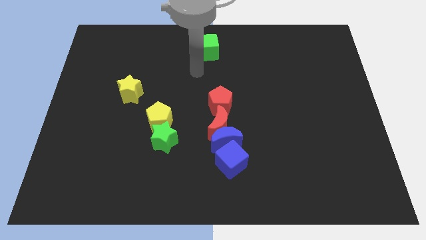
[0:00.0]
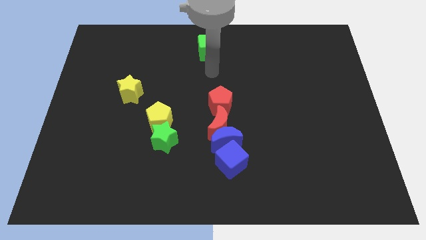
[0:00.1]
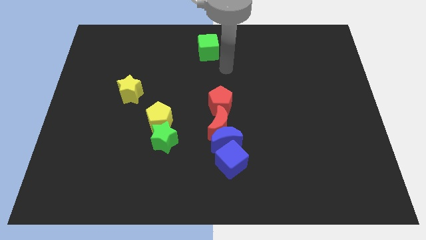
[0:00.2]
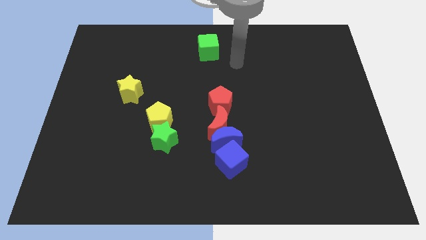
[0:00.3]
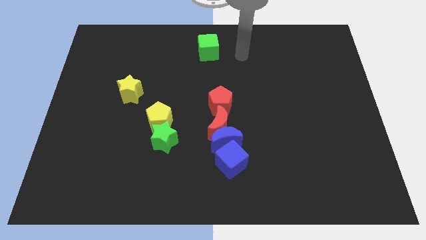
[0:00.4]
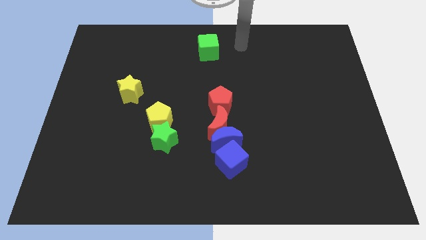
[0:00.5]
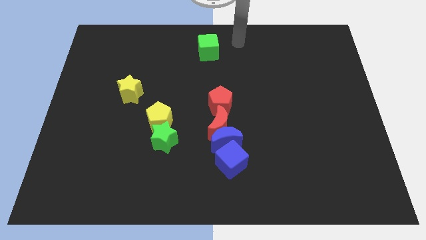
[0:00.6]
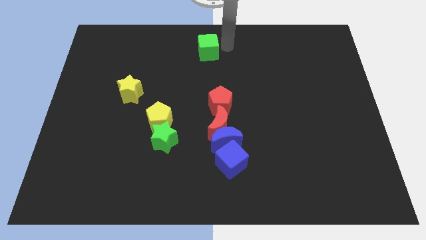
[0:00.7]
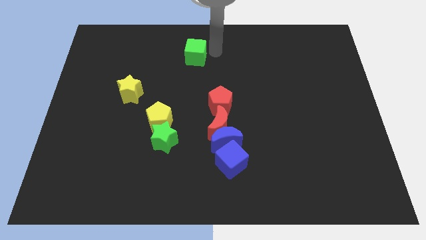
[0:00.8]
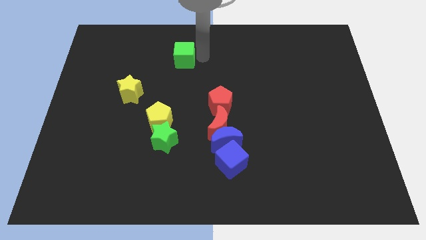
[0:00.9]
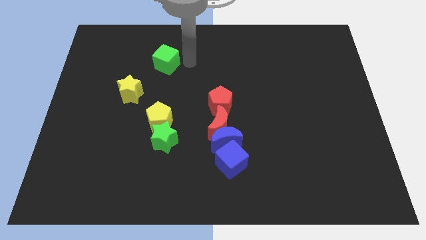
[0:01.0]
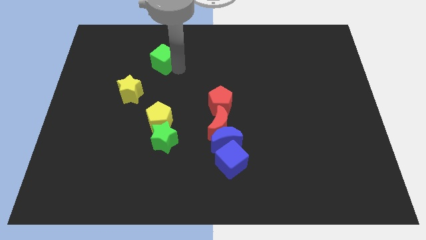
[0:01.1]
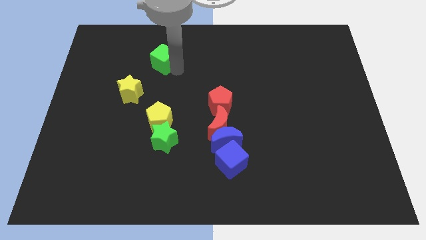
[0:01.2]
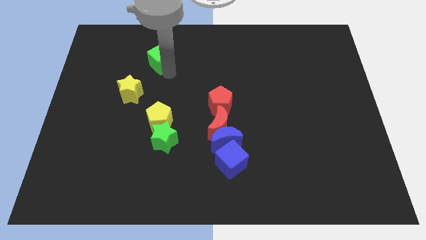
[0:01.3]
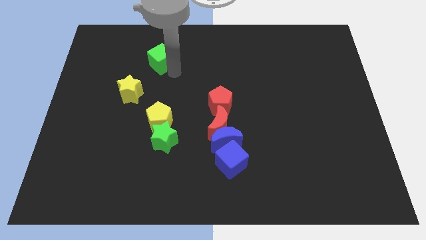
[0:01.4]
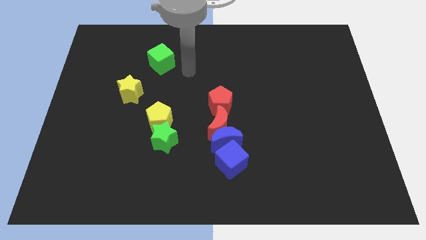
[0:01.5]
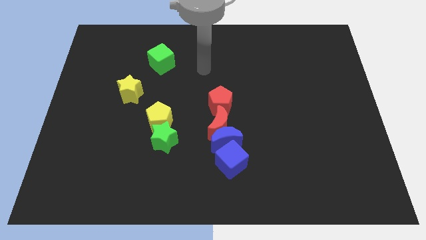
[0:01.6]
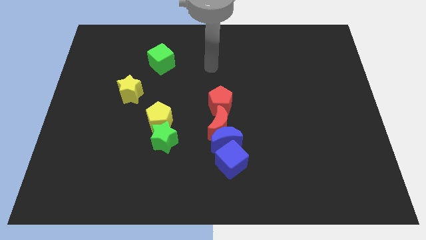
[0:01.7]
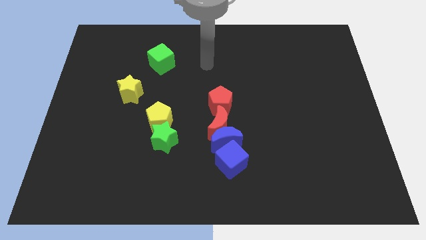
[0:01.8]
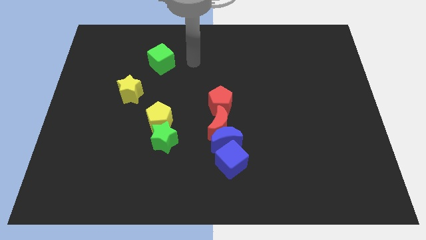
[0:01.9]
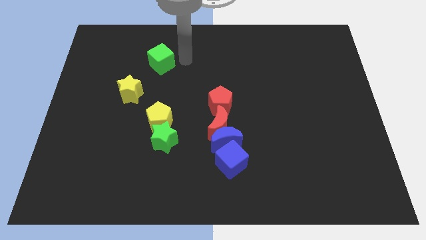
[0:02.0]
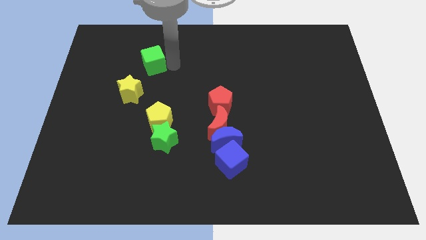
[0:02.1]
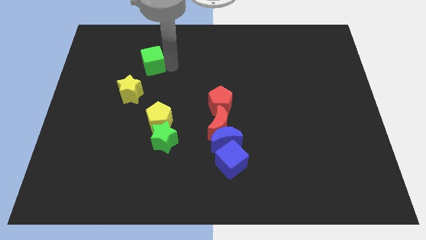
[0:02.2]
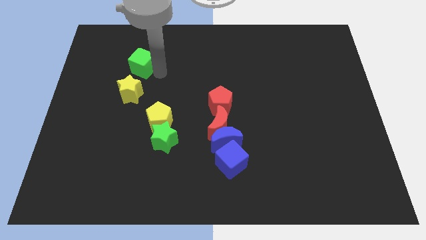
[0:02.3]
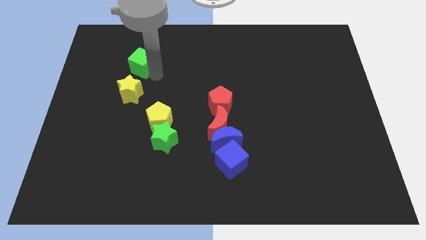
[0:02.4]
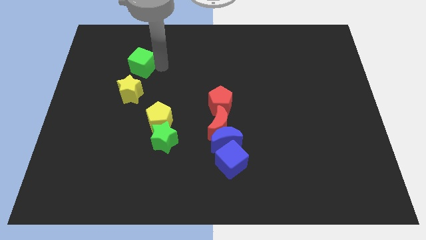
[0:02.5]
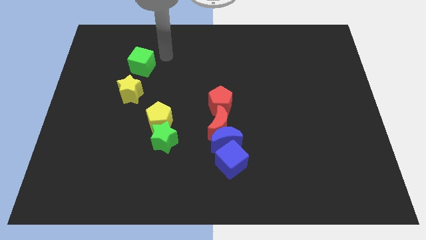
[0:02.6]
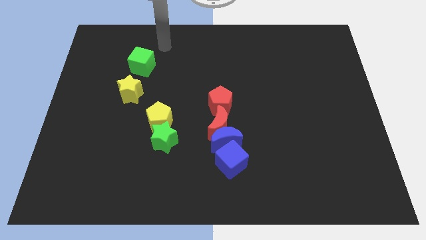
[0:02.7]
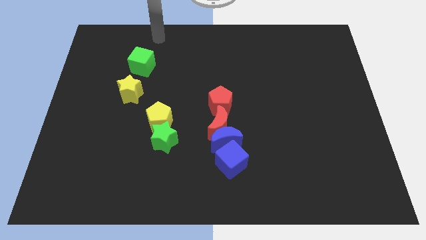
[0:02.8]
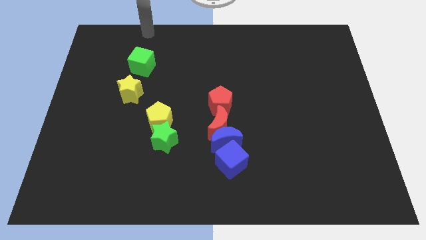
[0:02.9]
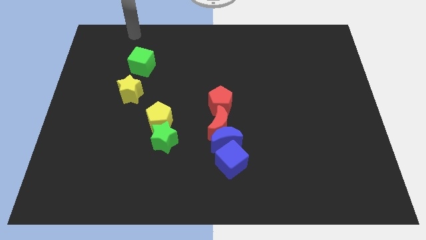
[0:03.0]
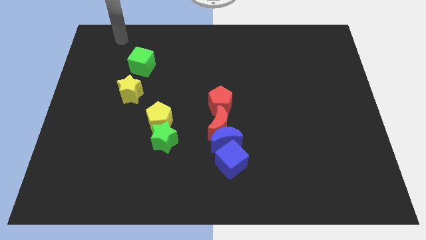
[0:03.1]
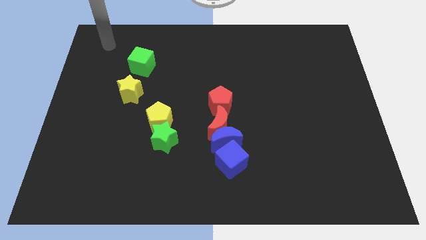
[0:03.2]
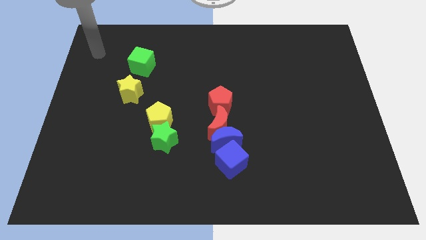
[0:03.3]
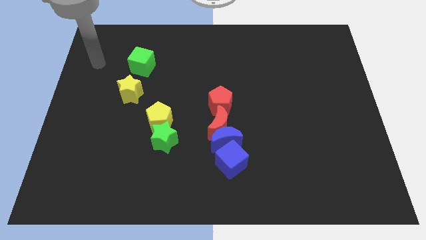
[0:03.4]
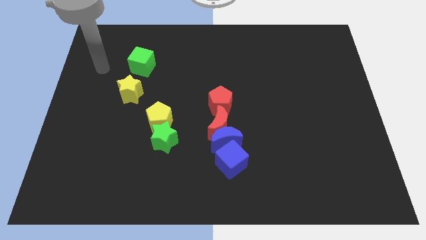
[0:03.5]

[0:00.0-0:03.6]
push the green cube to the top of the yellow star

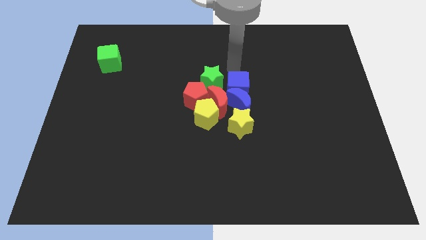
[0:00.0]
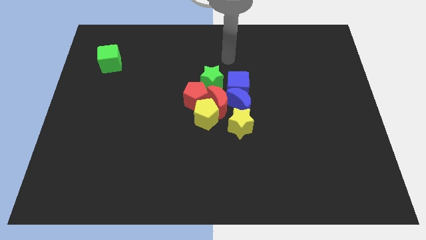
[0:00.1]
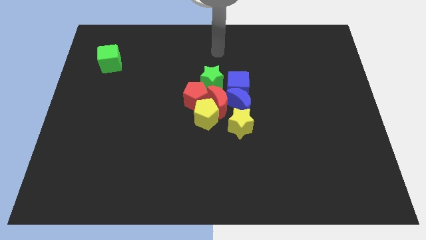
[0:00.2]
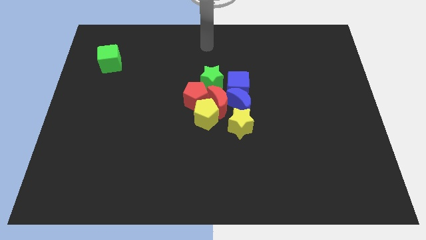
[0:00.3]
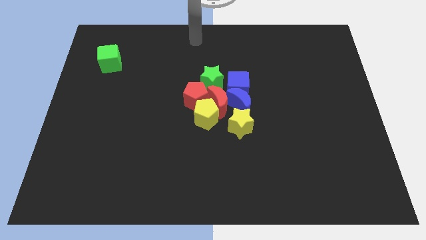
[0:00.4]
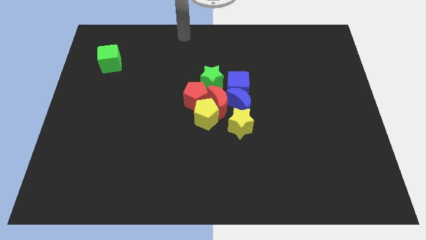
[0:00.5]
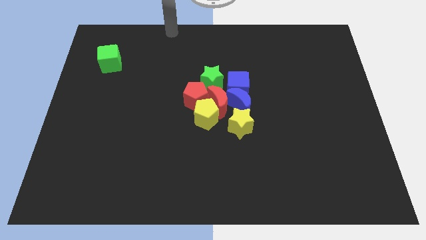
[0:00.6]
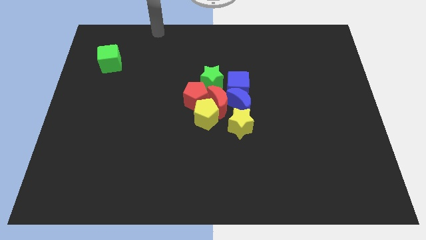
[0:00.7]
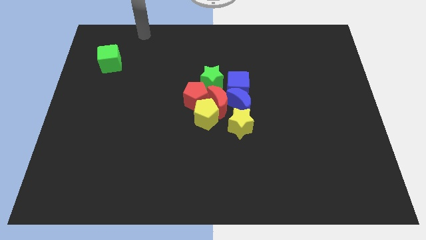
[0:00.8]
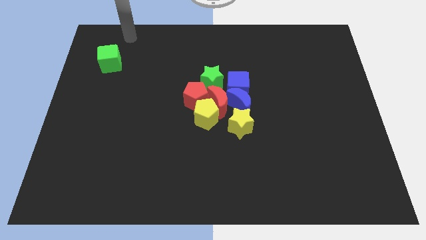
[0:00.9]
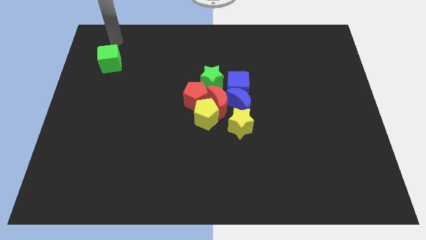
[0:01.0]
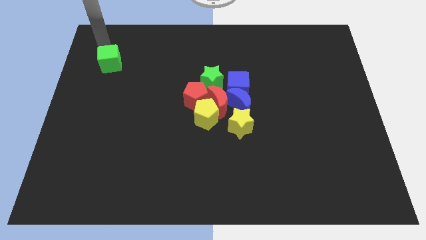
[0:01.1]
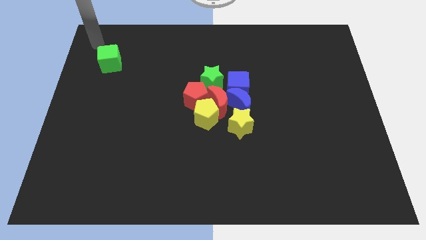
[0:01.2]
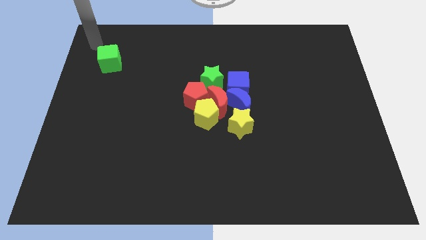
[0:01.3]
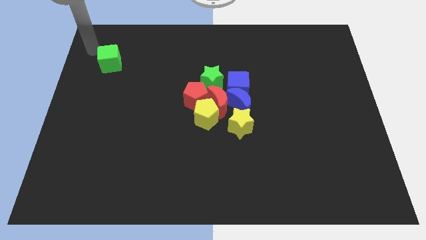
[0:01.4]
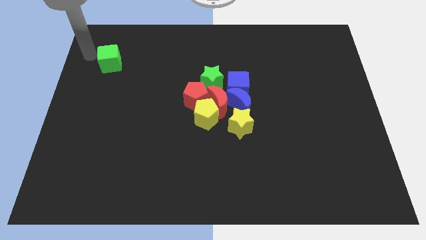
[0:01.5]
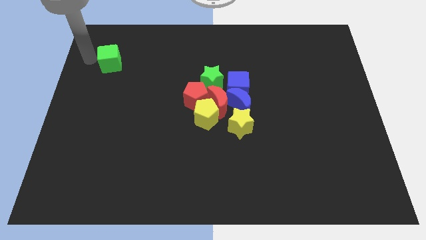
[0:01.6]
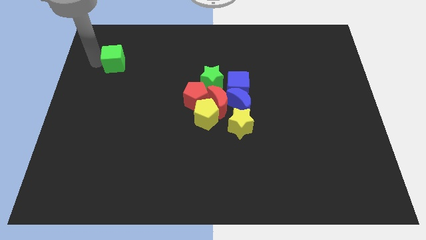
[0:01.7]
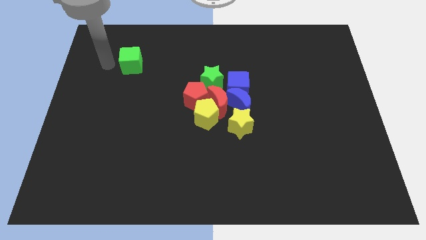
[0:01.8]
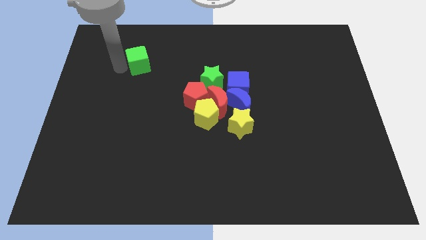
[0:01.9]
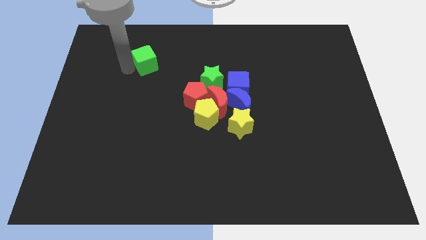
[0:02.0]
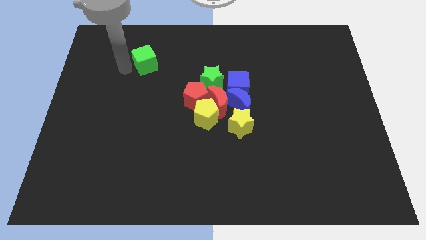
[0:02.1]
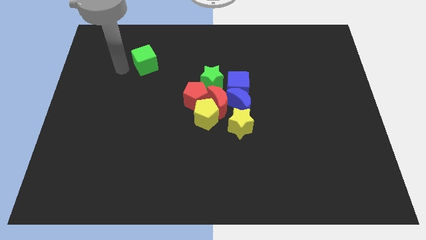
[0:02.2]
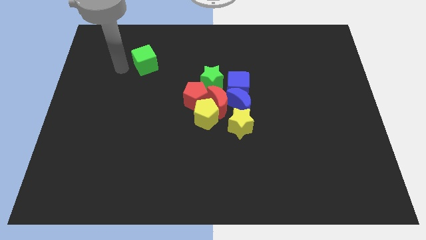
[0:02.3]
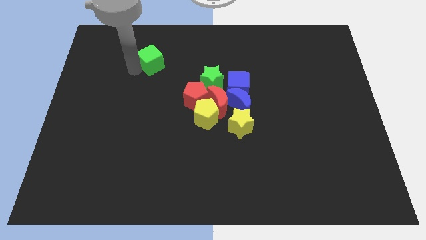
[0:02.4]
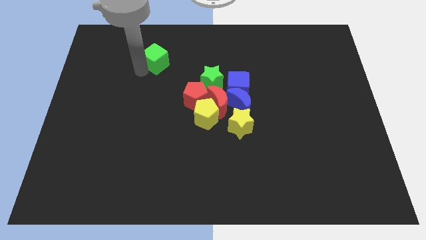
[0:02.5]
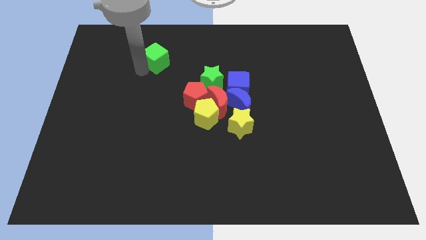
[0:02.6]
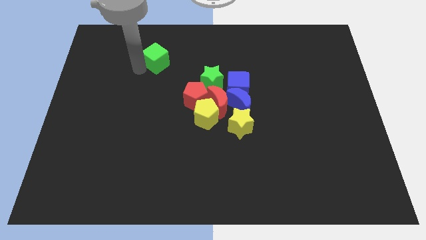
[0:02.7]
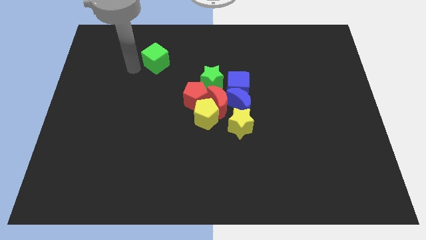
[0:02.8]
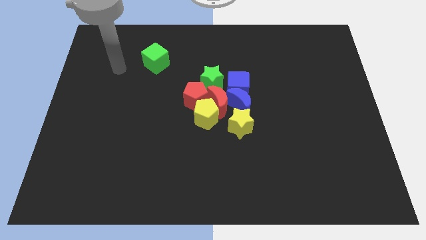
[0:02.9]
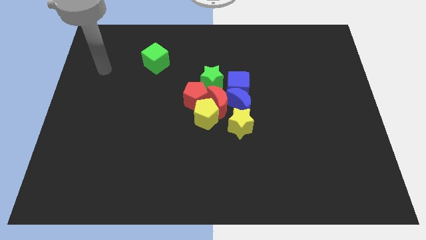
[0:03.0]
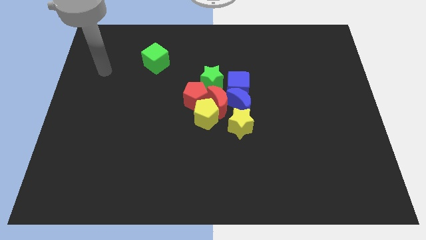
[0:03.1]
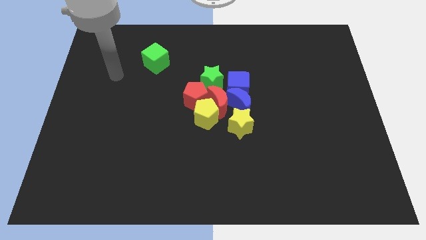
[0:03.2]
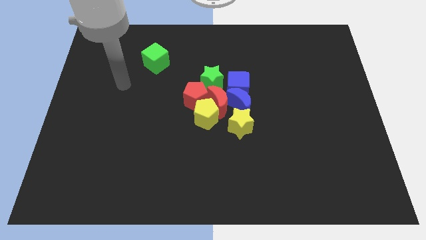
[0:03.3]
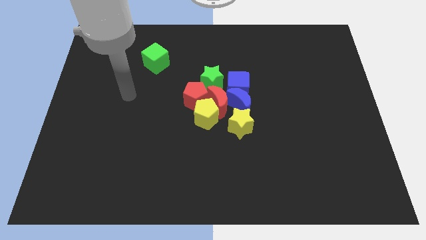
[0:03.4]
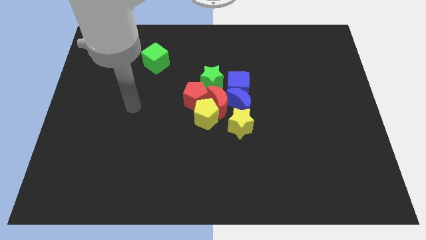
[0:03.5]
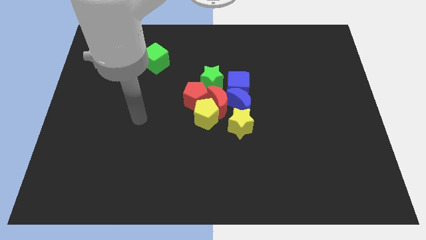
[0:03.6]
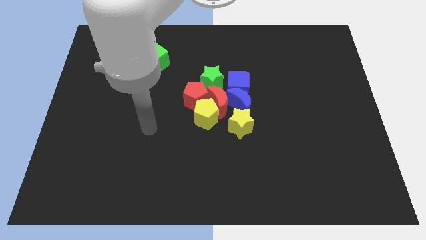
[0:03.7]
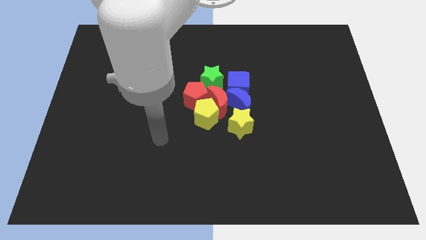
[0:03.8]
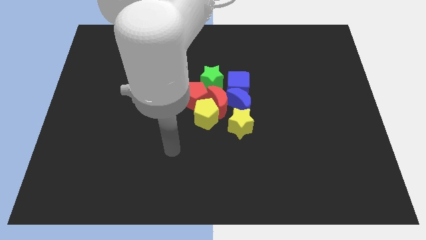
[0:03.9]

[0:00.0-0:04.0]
move the green cube to the top left of the red pentagon

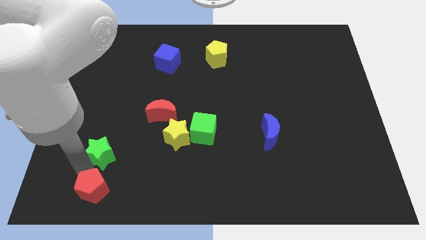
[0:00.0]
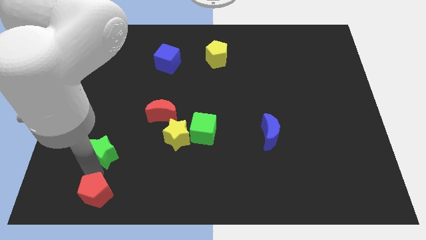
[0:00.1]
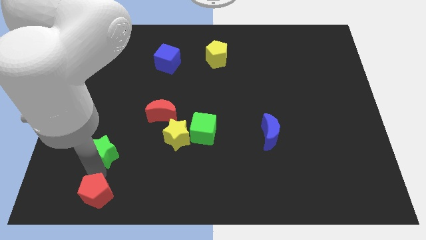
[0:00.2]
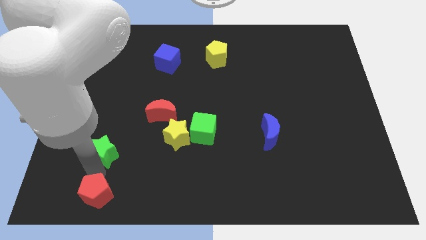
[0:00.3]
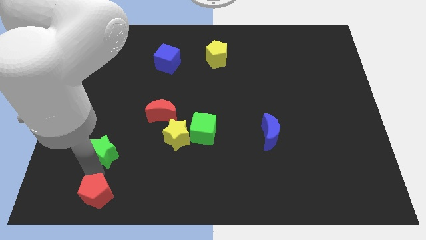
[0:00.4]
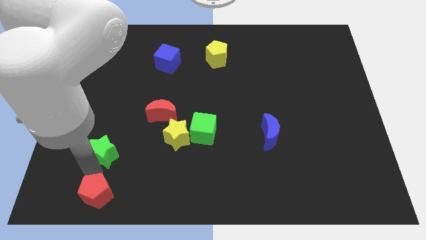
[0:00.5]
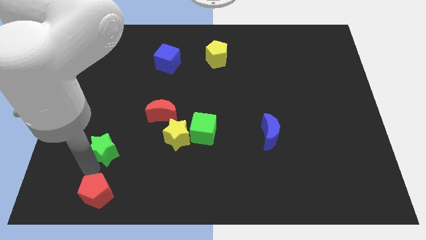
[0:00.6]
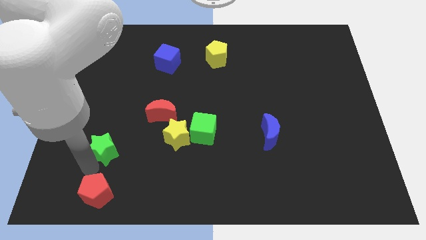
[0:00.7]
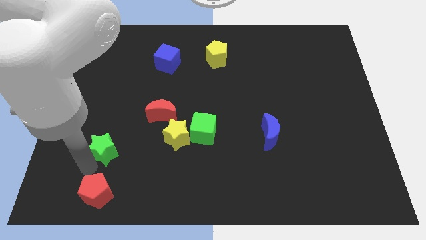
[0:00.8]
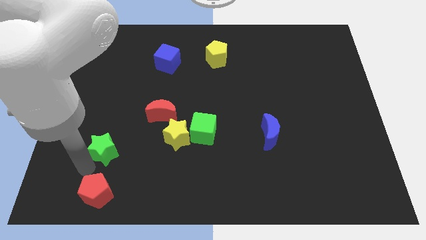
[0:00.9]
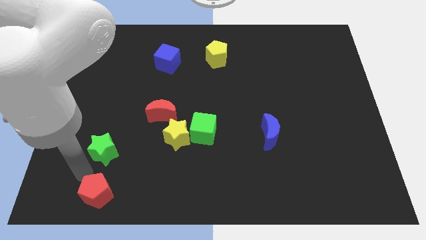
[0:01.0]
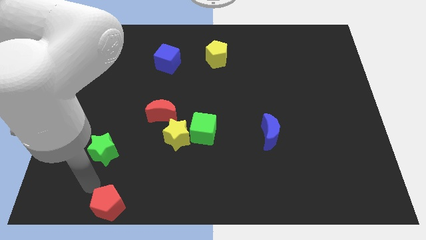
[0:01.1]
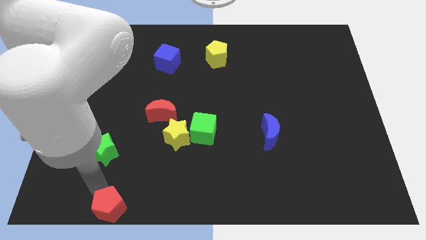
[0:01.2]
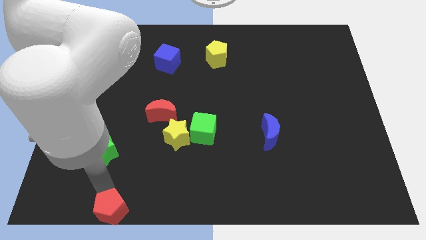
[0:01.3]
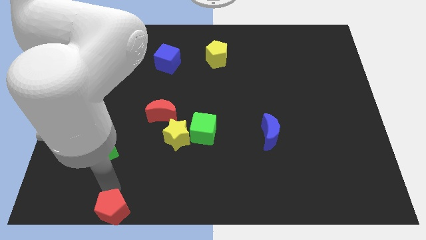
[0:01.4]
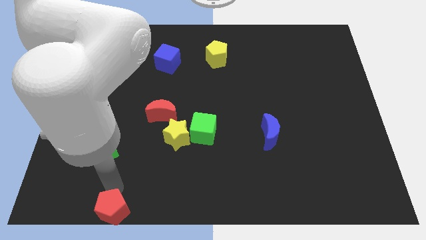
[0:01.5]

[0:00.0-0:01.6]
move the red pentagon to the bottom of the board
